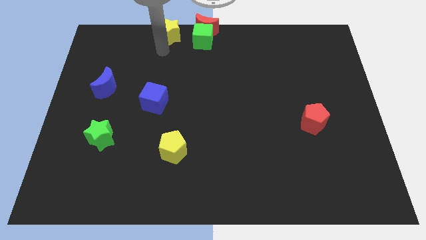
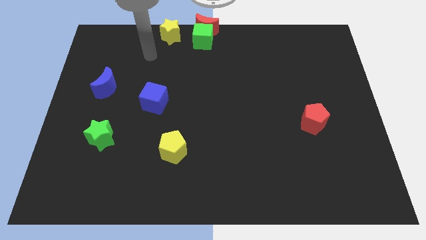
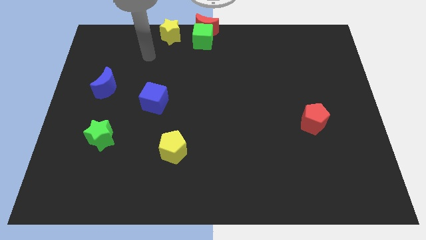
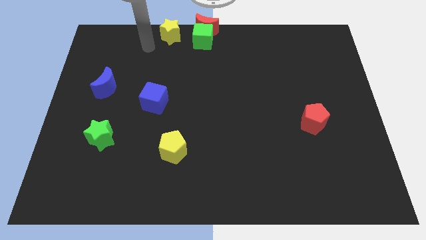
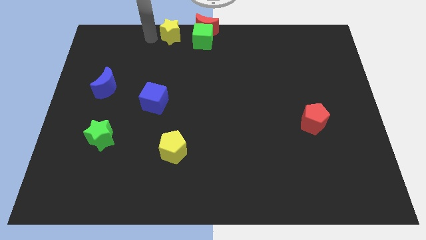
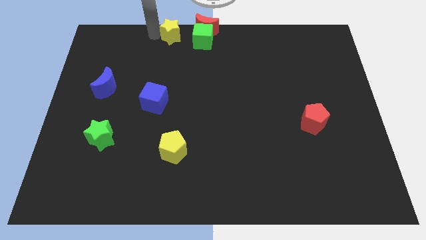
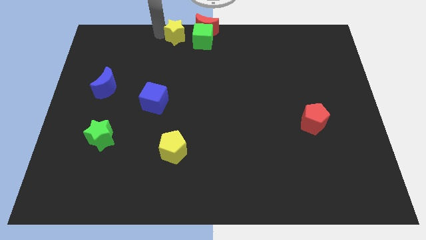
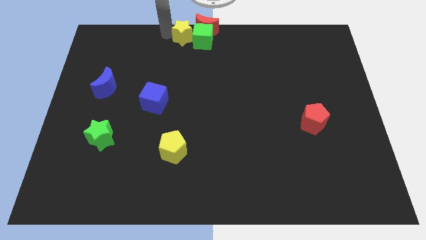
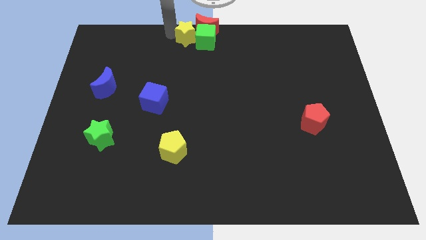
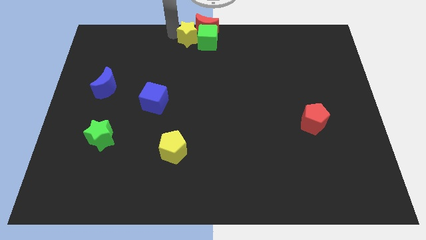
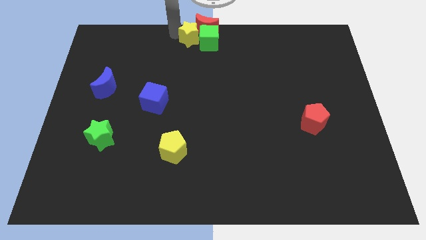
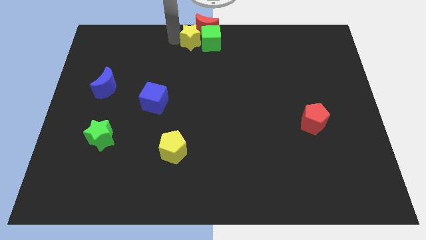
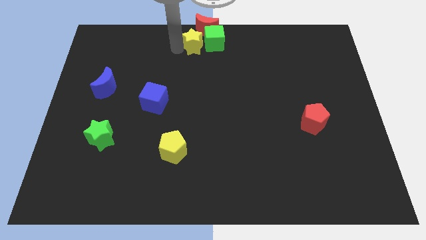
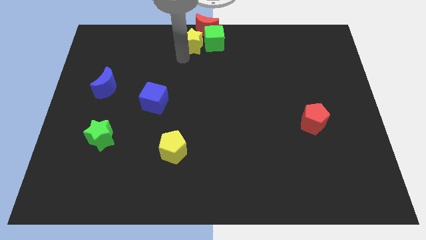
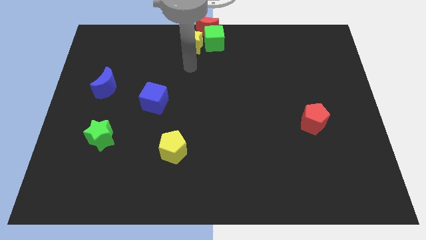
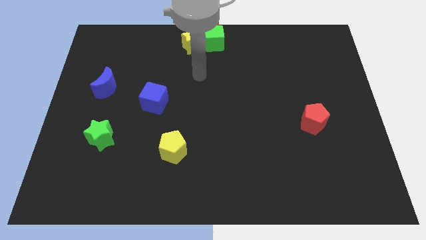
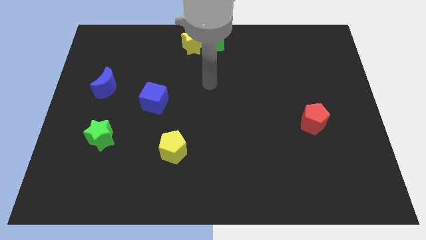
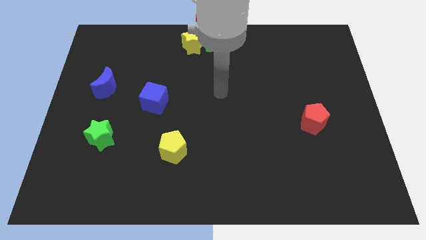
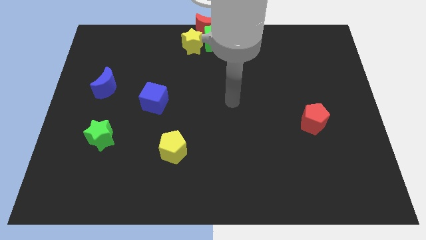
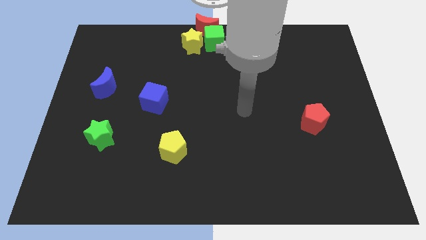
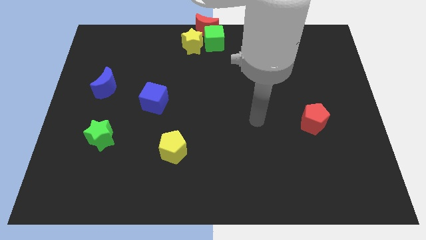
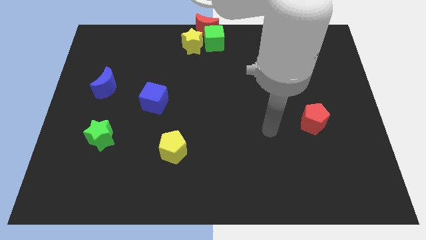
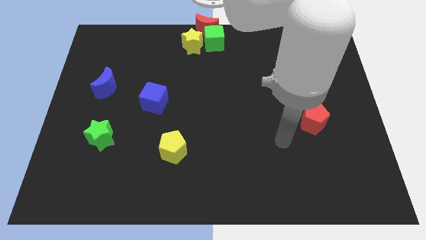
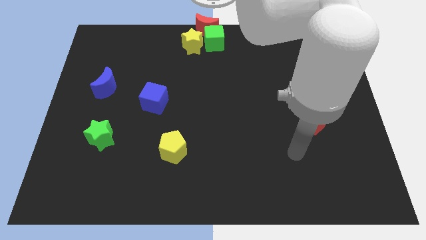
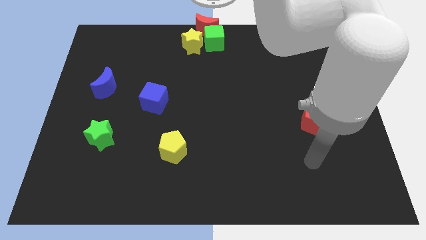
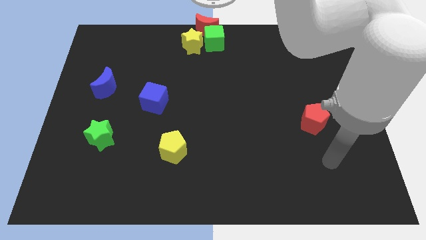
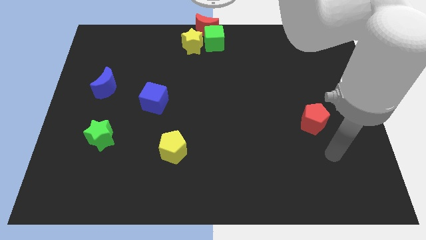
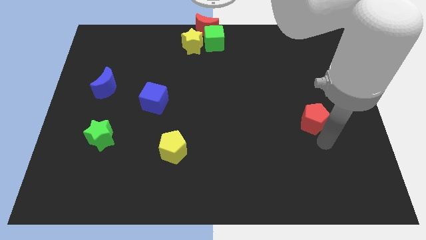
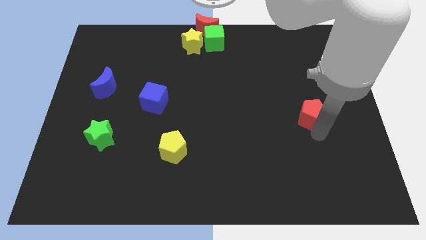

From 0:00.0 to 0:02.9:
move yellow star towards the green cube

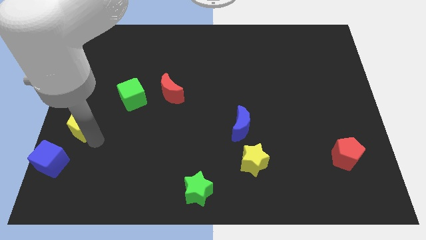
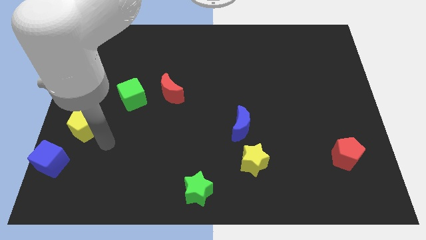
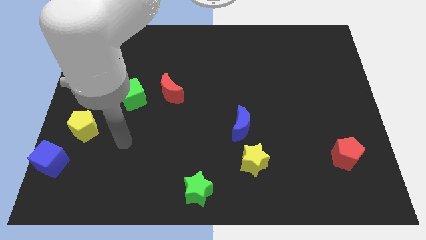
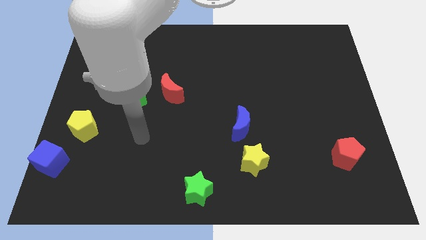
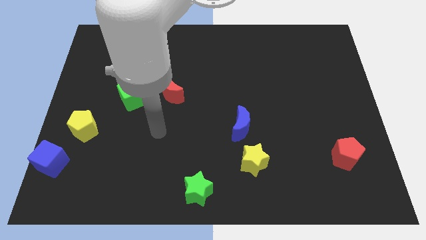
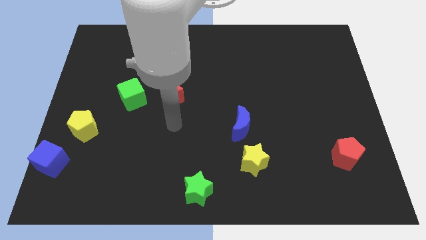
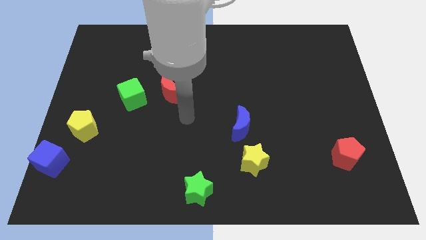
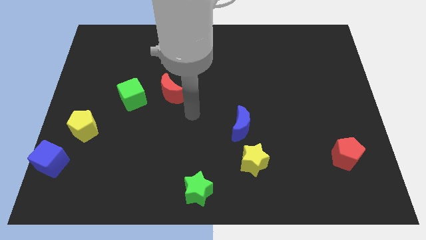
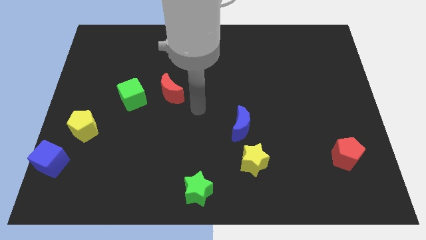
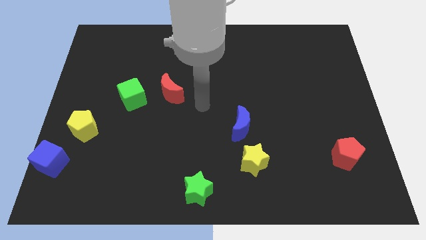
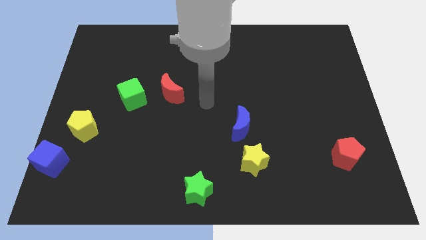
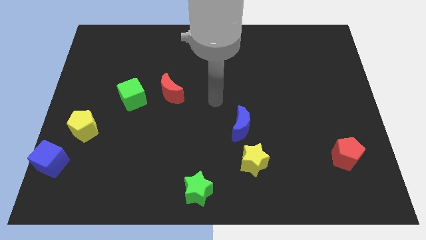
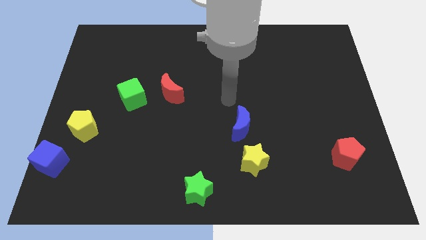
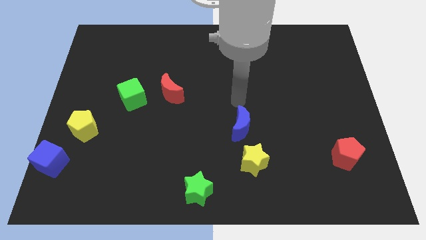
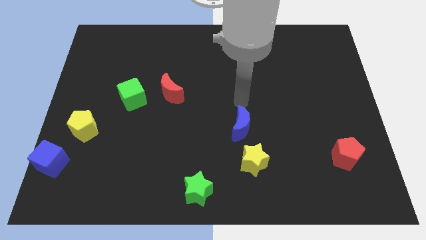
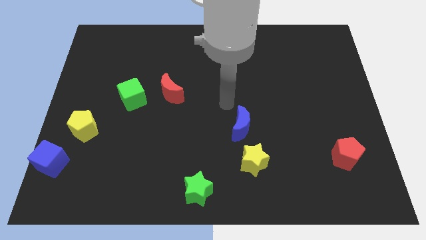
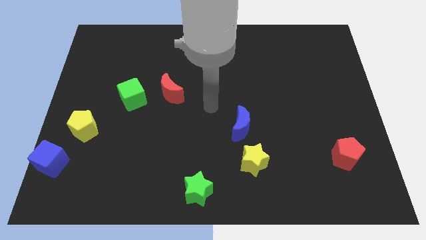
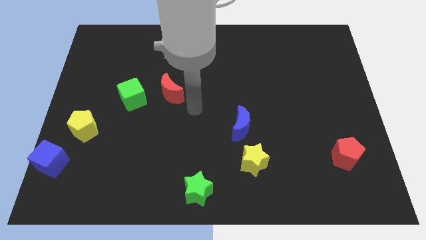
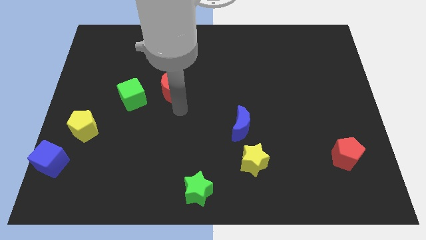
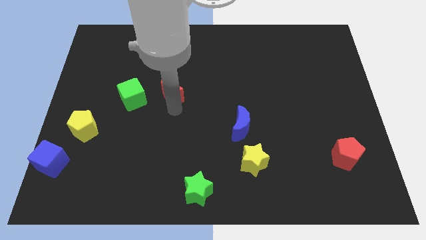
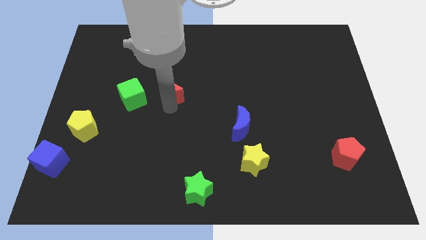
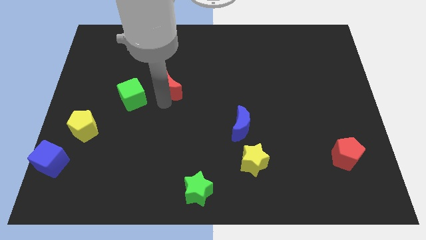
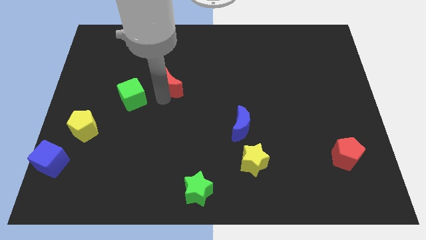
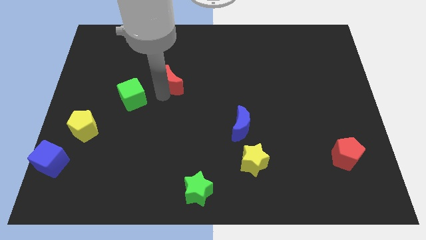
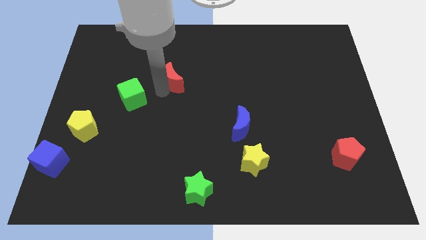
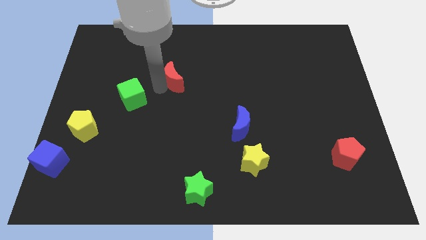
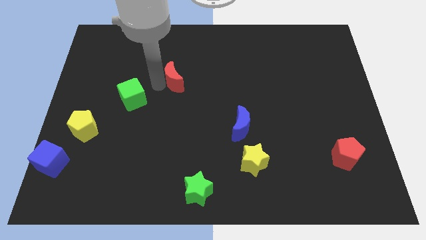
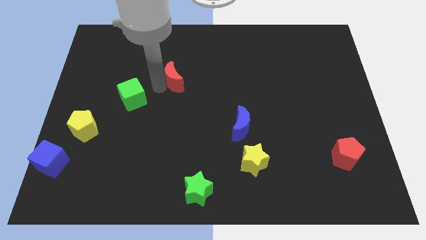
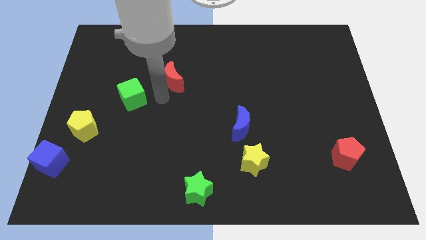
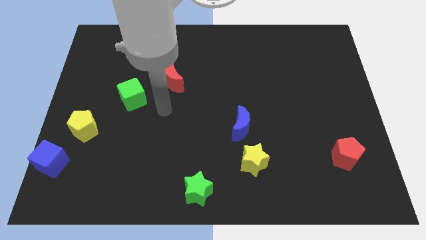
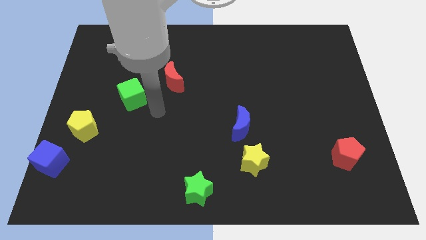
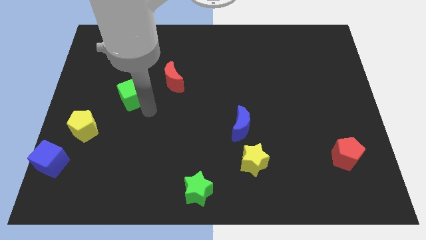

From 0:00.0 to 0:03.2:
move the red crescent to the top of the board

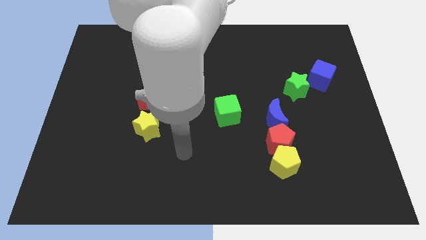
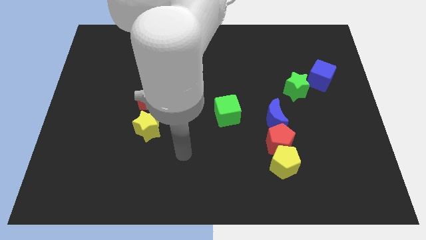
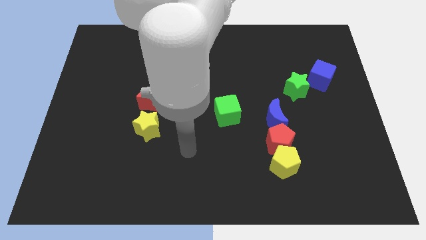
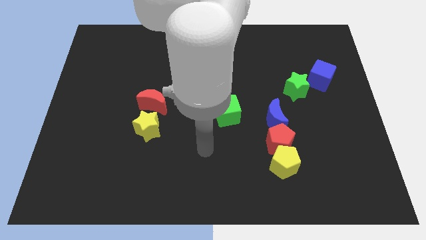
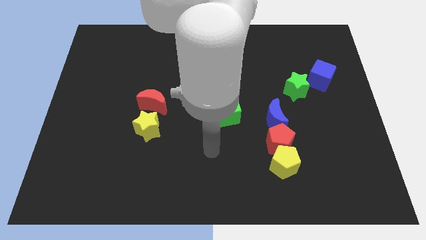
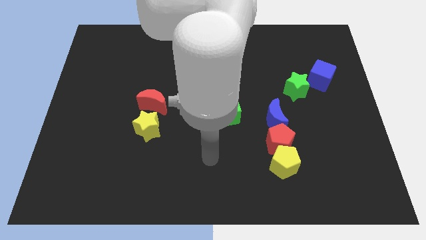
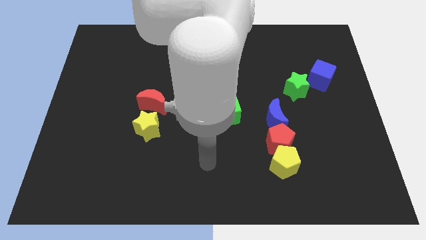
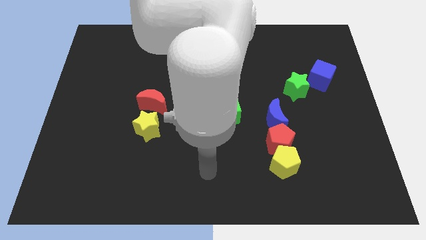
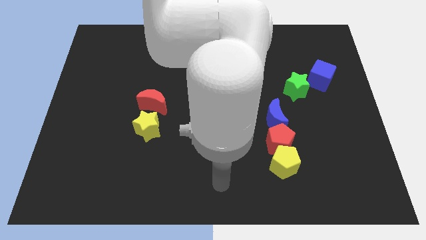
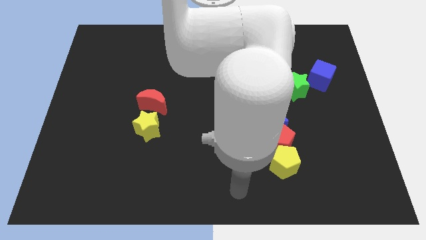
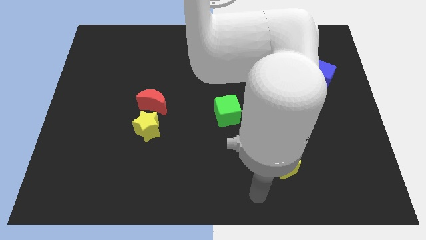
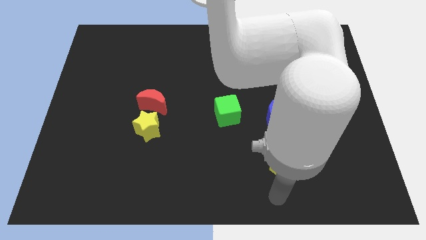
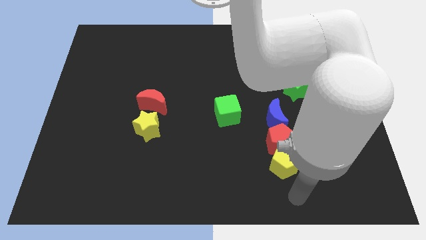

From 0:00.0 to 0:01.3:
place the arm below the yellow pentagon

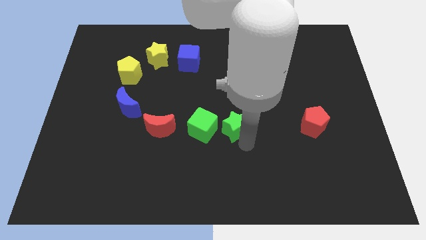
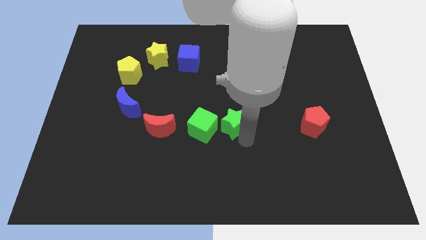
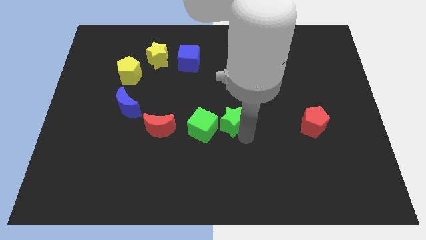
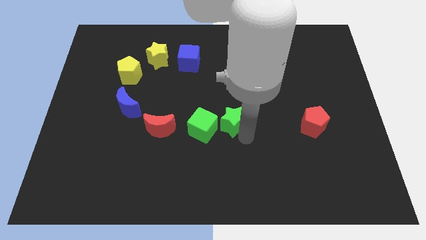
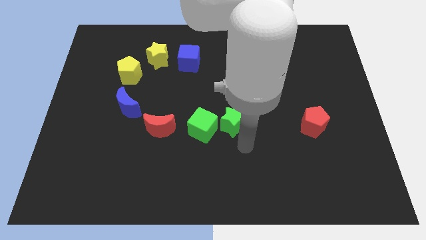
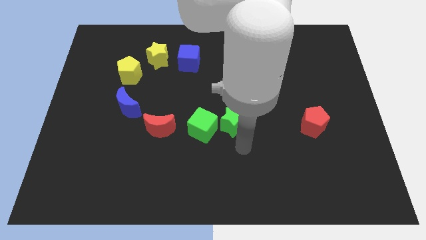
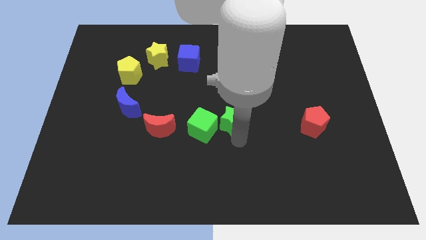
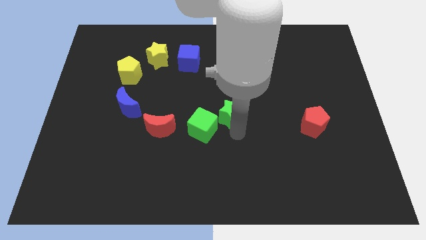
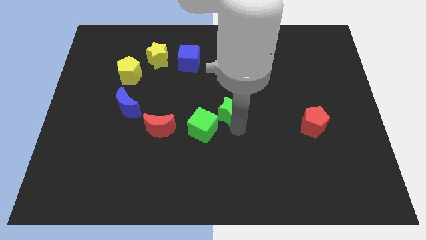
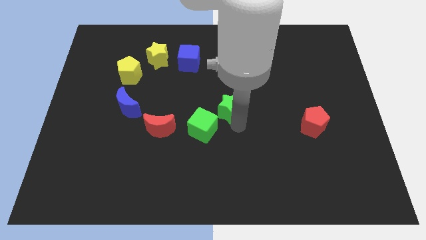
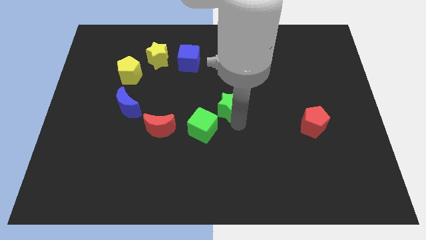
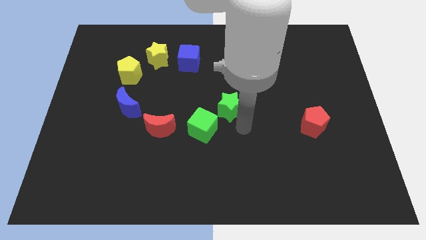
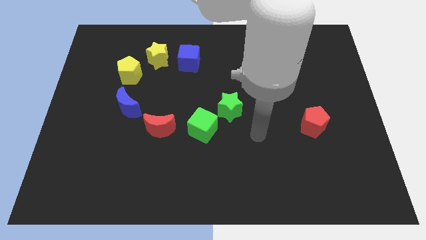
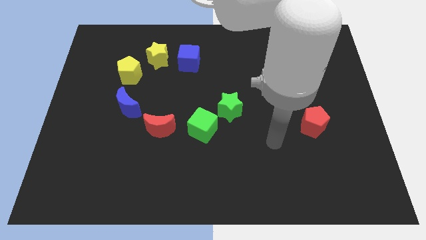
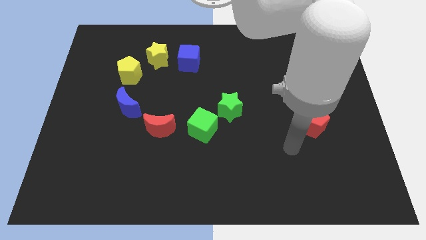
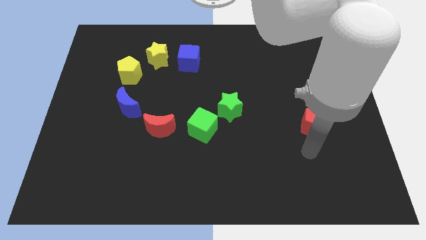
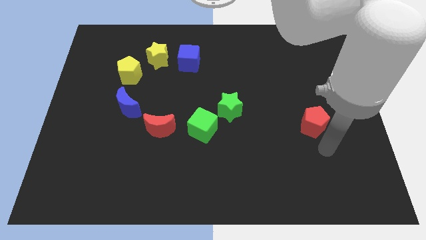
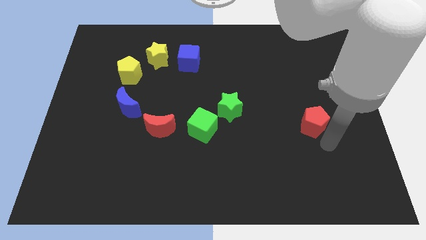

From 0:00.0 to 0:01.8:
put the green star diagonally top right to the green cube
